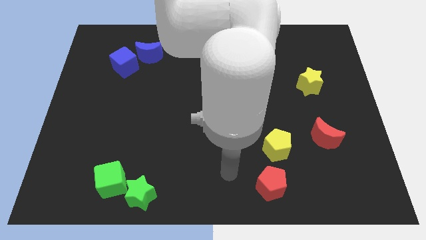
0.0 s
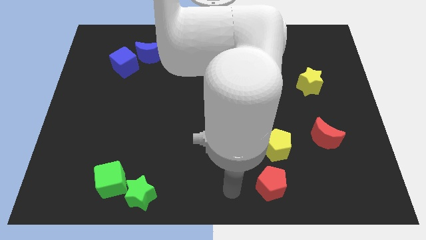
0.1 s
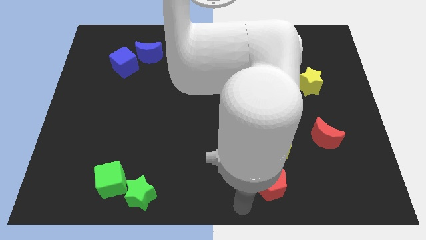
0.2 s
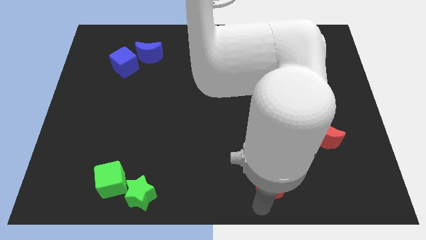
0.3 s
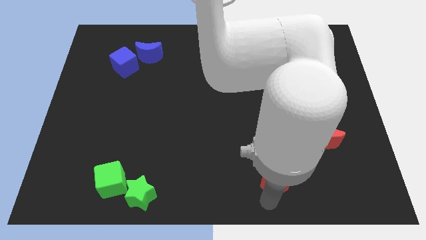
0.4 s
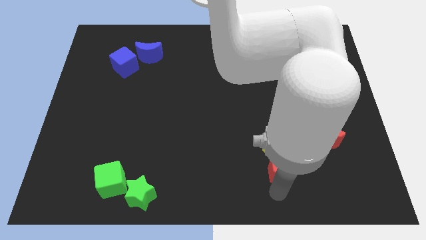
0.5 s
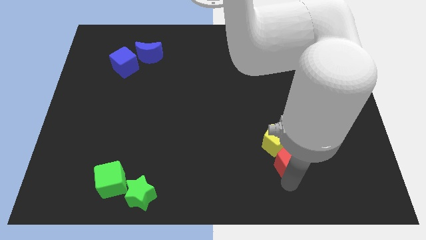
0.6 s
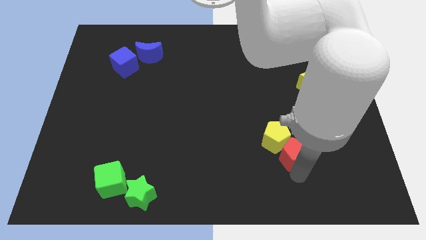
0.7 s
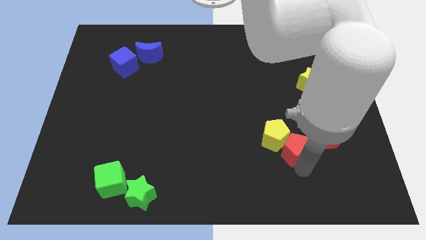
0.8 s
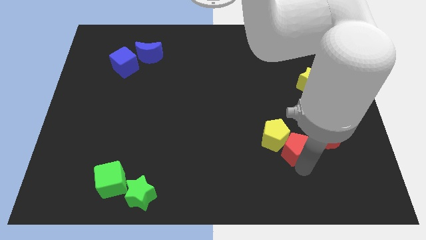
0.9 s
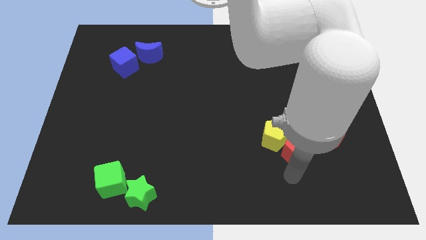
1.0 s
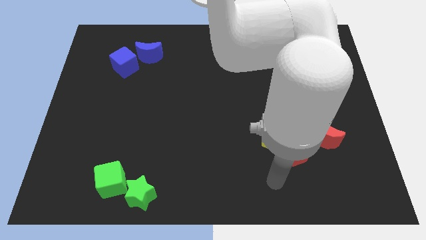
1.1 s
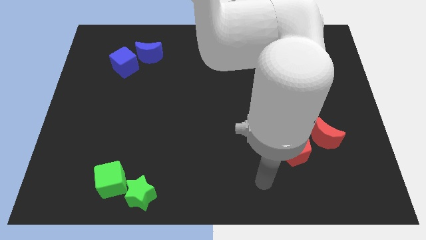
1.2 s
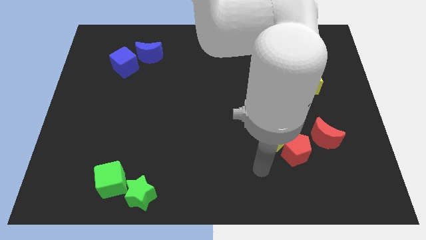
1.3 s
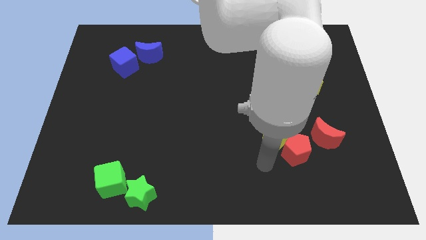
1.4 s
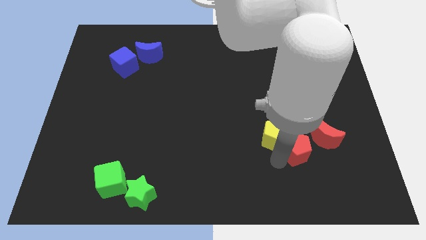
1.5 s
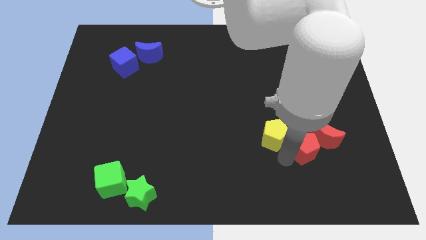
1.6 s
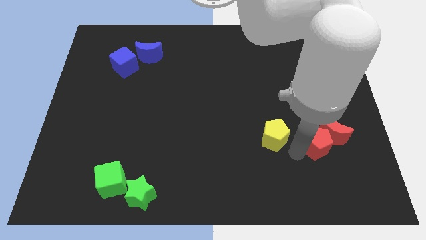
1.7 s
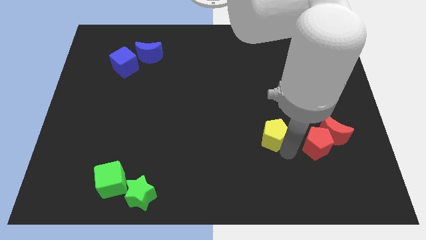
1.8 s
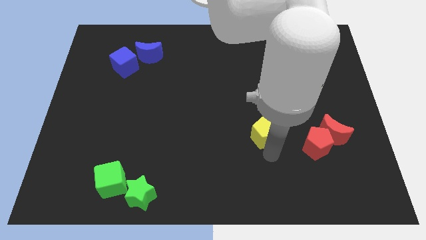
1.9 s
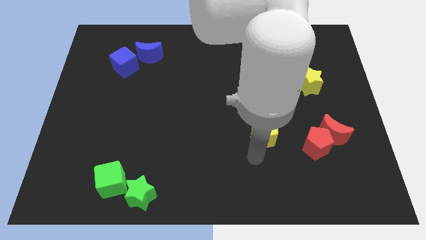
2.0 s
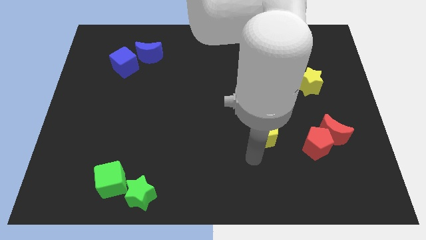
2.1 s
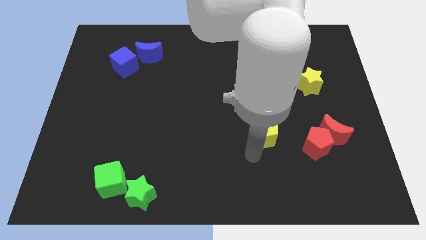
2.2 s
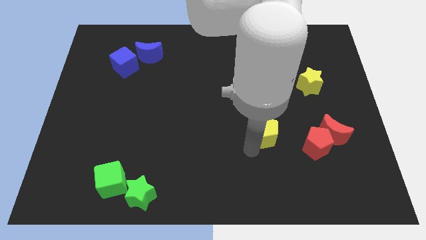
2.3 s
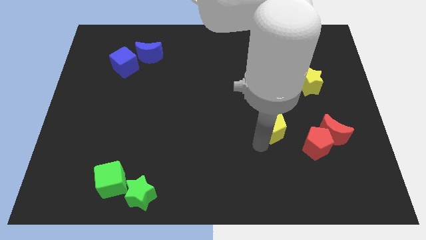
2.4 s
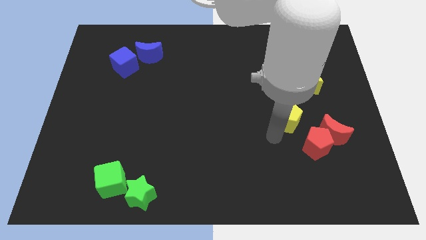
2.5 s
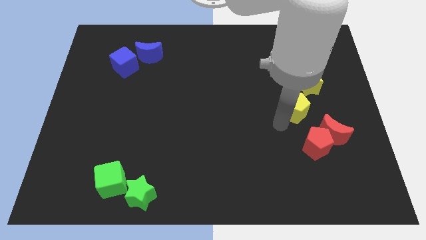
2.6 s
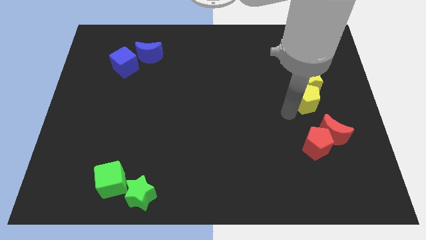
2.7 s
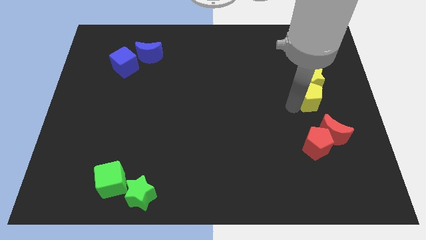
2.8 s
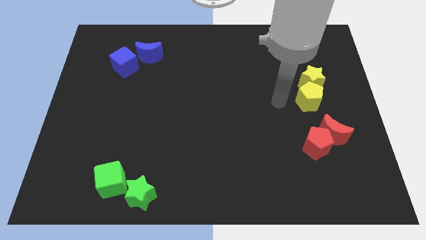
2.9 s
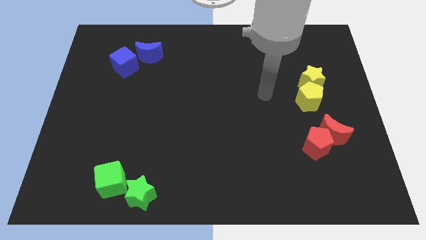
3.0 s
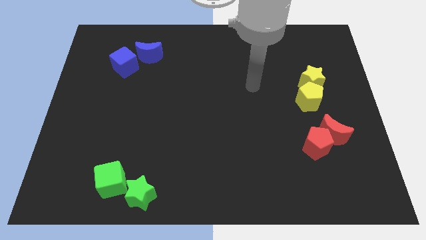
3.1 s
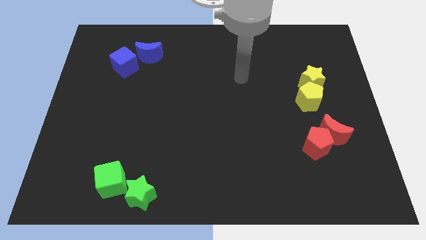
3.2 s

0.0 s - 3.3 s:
push the yellow pentagon into the yellow star

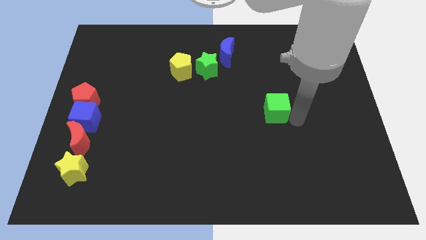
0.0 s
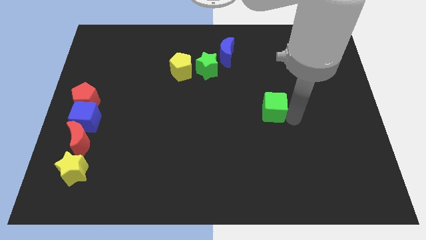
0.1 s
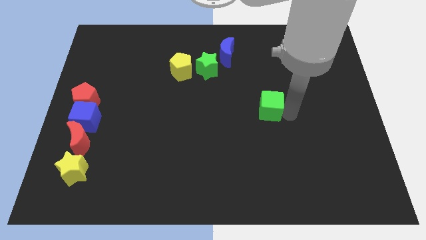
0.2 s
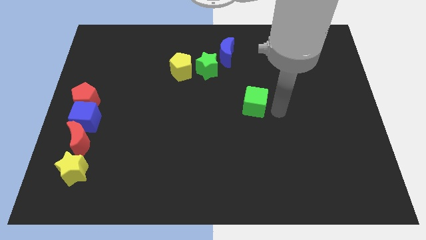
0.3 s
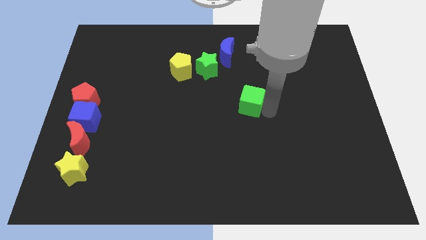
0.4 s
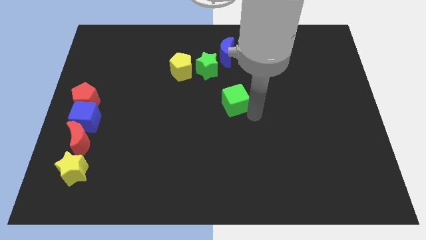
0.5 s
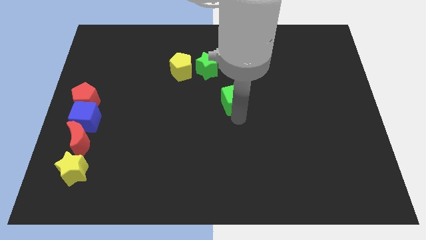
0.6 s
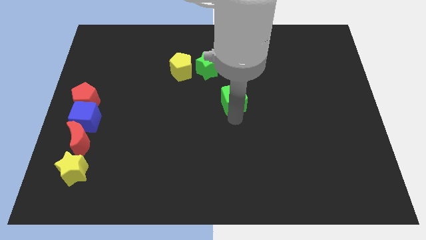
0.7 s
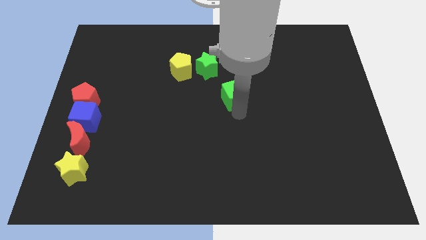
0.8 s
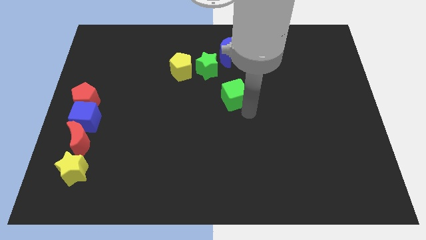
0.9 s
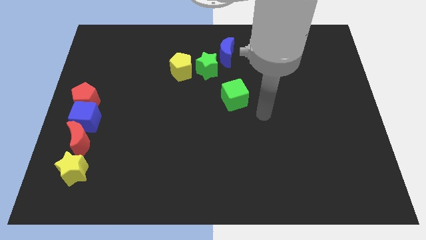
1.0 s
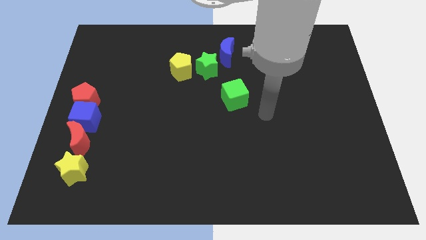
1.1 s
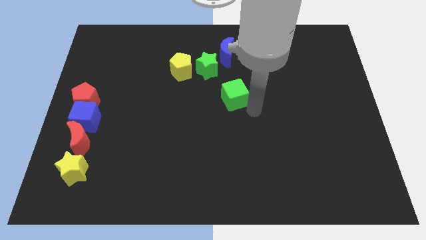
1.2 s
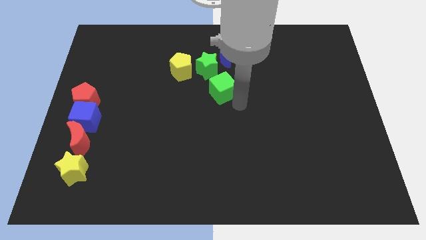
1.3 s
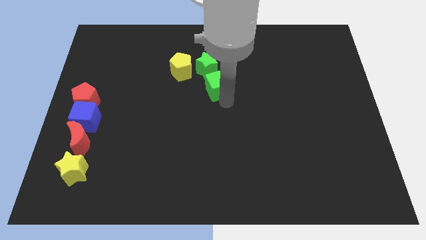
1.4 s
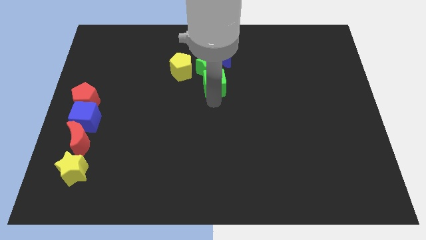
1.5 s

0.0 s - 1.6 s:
push the green cube to the bottom side of the green star

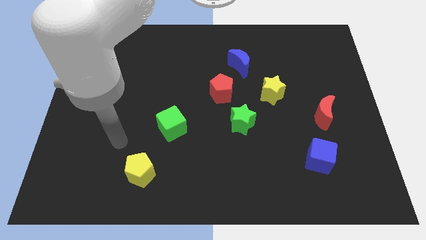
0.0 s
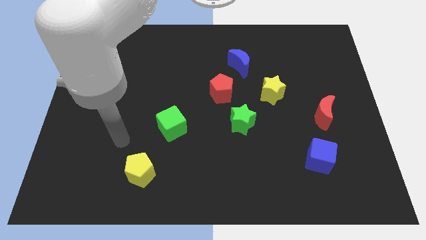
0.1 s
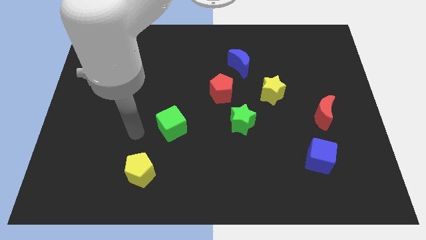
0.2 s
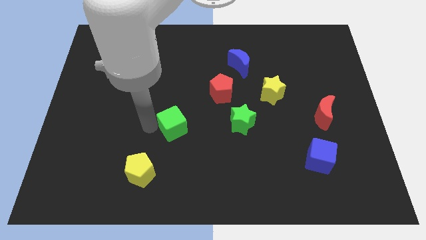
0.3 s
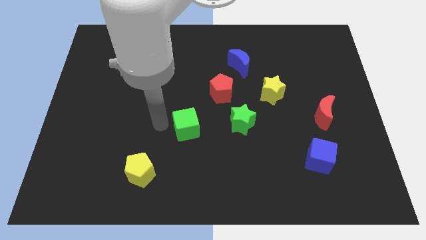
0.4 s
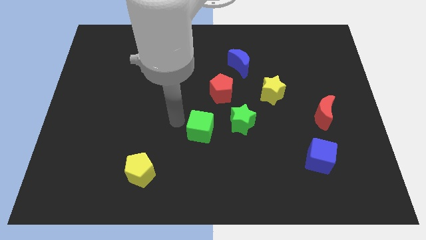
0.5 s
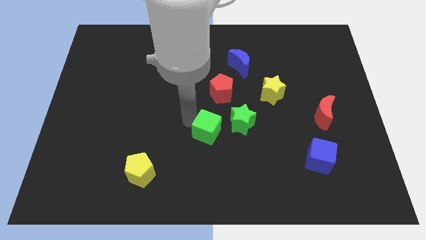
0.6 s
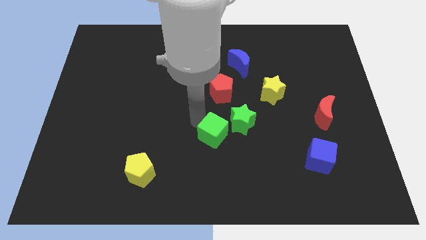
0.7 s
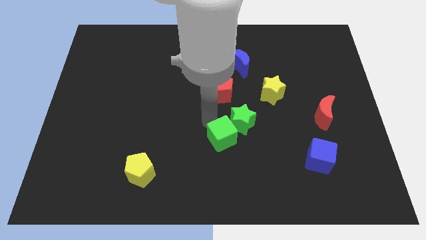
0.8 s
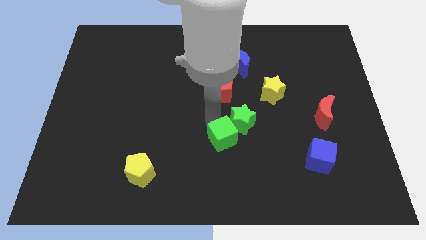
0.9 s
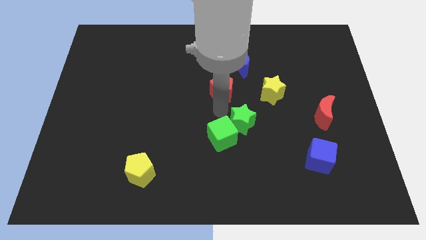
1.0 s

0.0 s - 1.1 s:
move the green cube slightly to the right

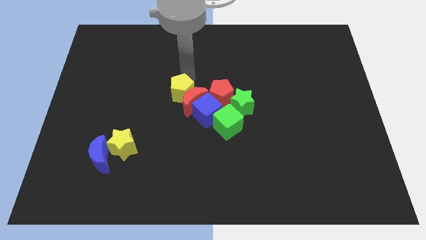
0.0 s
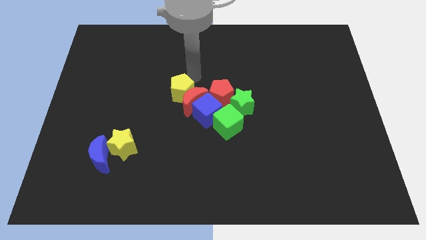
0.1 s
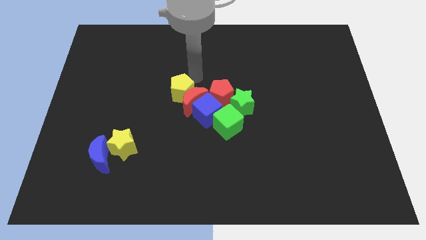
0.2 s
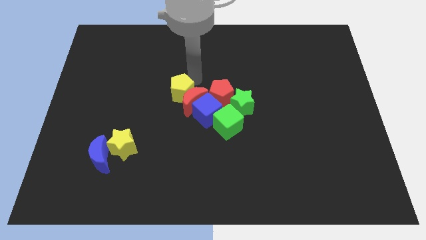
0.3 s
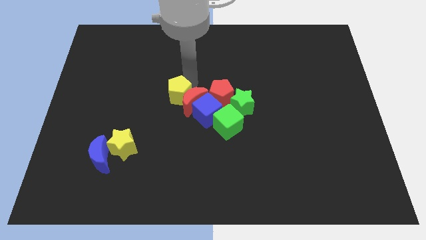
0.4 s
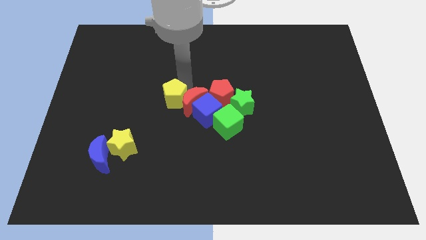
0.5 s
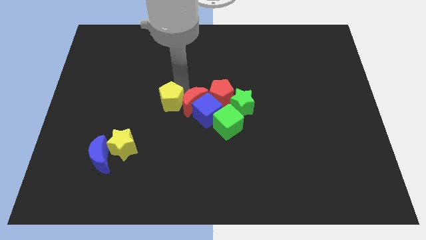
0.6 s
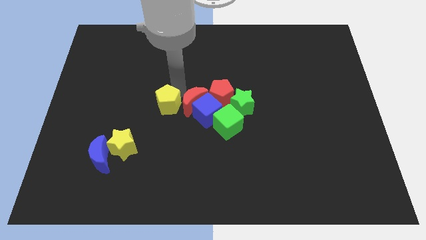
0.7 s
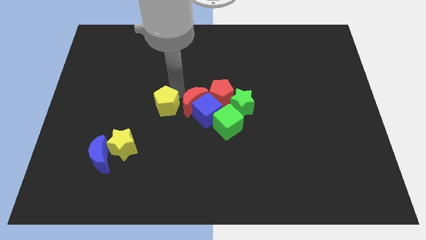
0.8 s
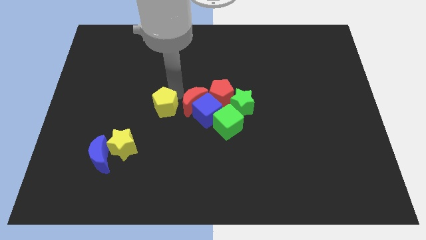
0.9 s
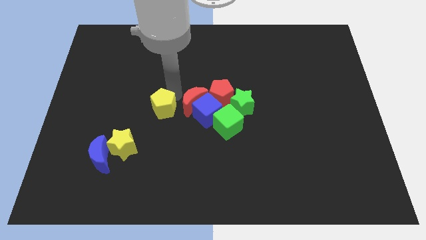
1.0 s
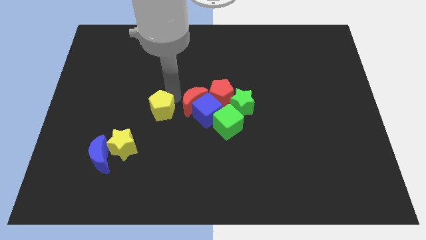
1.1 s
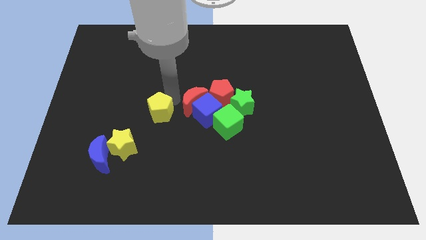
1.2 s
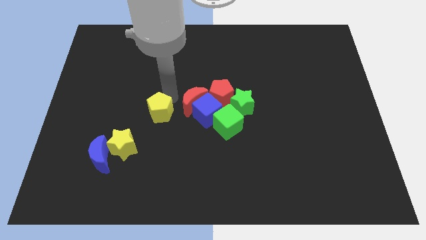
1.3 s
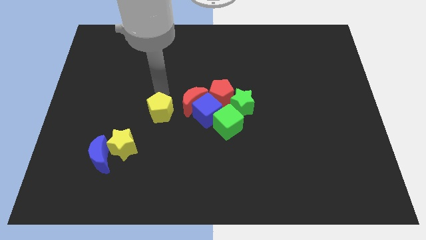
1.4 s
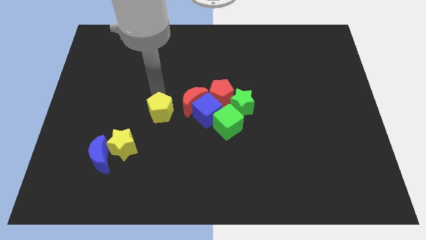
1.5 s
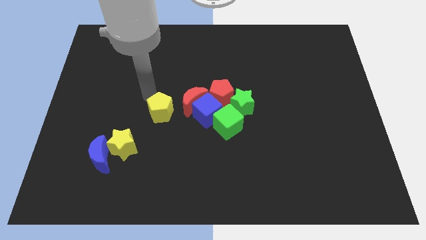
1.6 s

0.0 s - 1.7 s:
separate the yellow pentagon from the red crescent

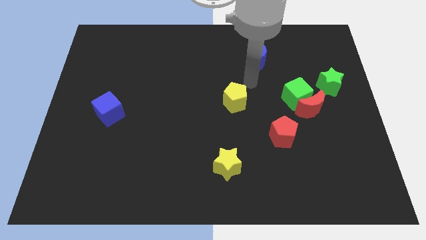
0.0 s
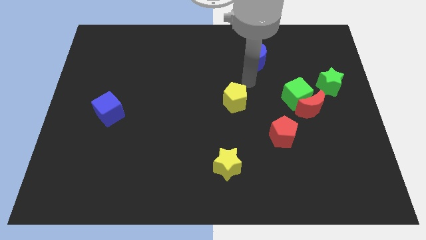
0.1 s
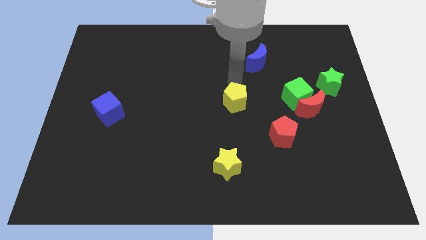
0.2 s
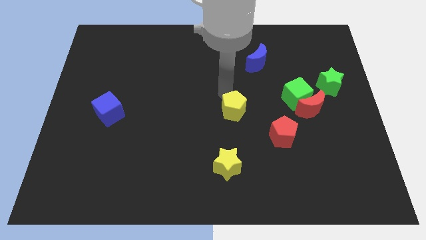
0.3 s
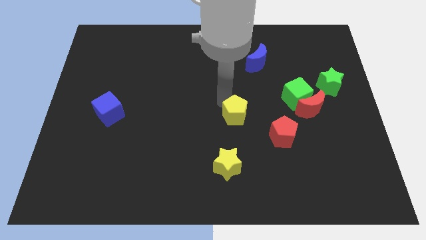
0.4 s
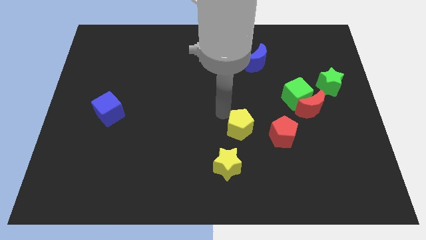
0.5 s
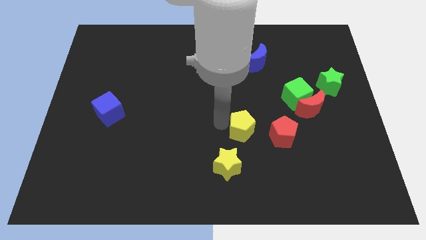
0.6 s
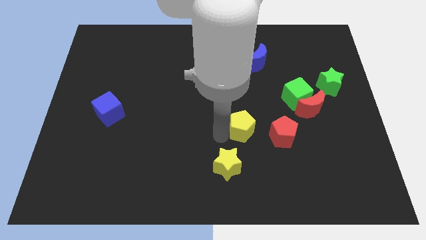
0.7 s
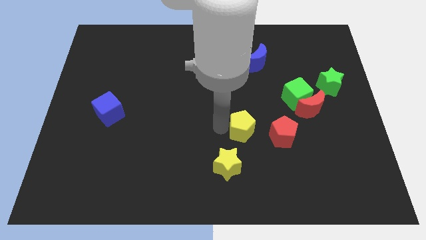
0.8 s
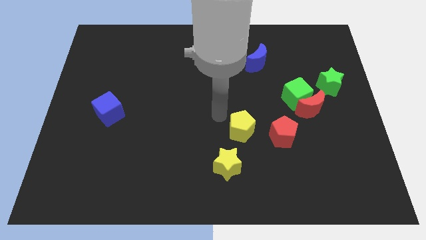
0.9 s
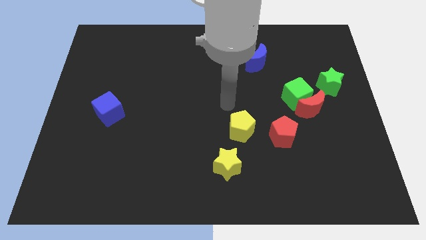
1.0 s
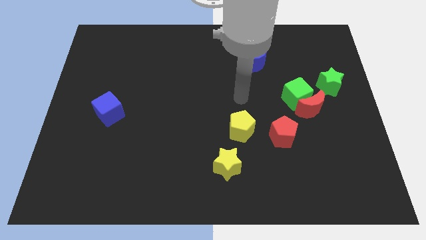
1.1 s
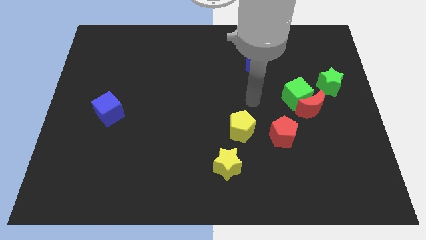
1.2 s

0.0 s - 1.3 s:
move the yellow pentagon to the left of the red pentagon
